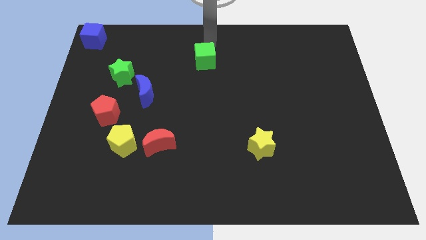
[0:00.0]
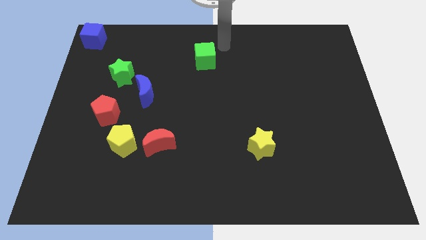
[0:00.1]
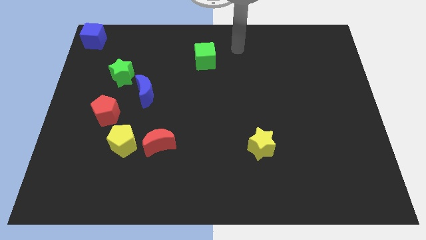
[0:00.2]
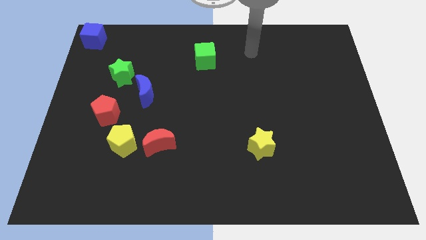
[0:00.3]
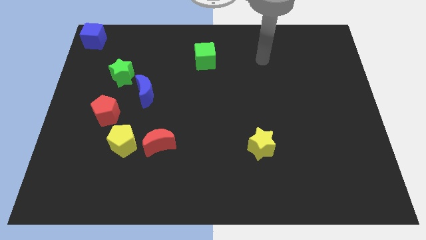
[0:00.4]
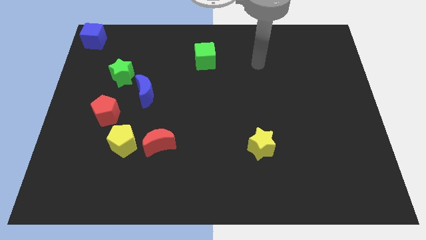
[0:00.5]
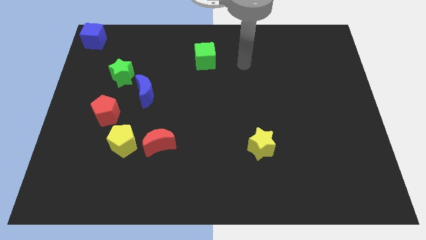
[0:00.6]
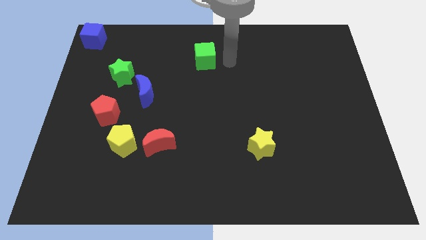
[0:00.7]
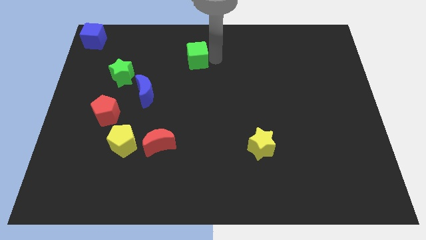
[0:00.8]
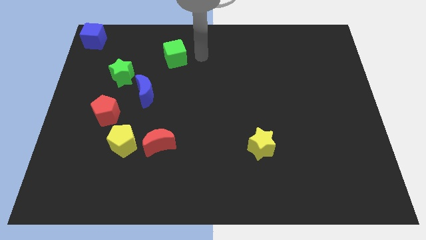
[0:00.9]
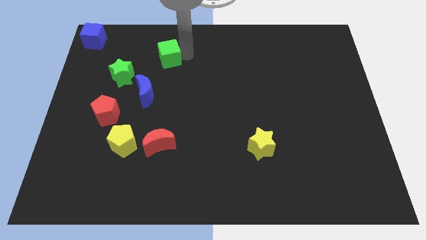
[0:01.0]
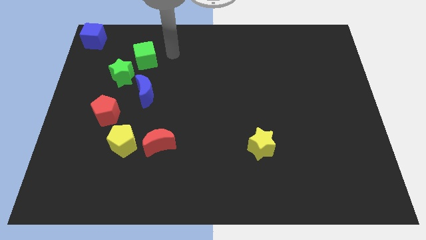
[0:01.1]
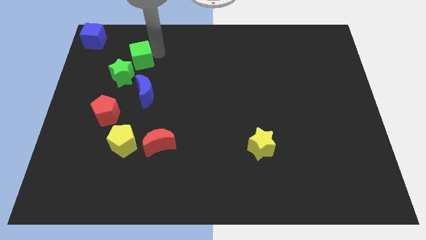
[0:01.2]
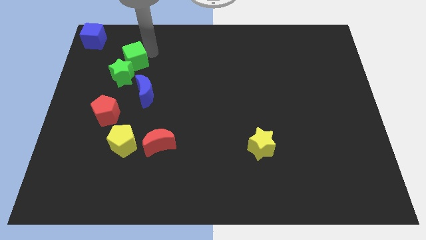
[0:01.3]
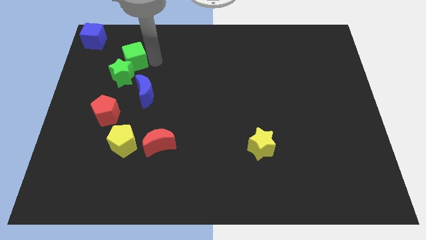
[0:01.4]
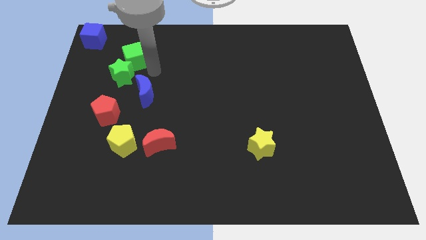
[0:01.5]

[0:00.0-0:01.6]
push the green cube into the green star

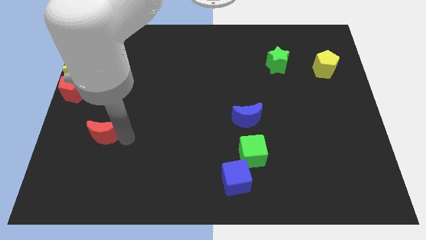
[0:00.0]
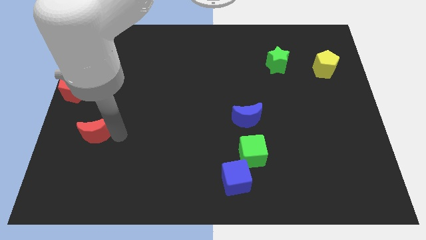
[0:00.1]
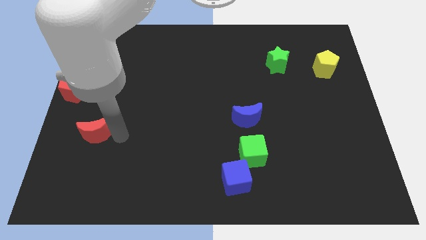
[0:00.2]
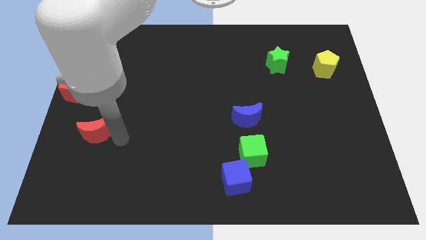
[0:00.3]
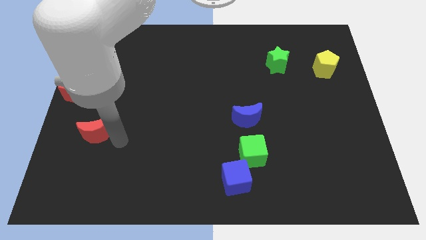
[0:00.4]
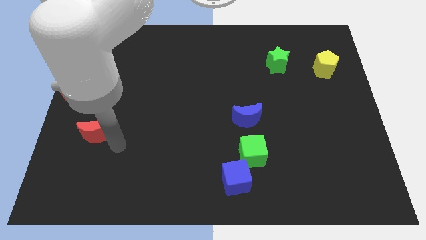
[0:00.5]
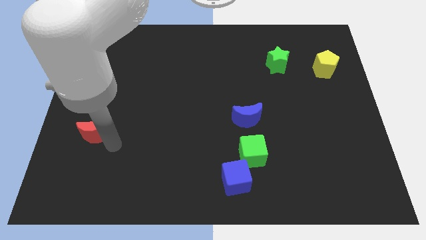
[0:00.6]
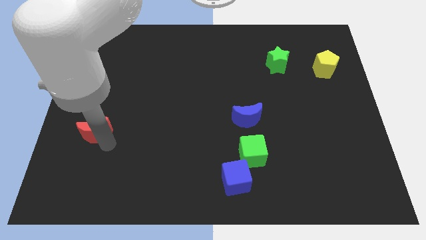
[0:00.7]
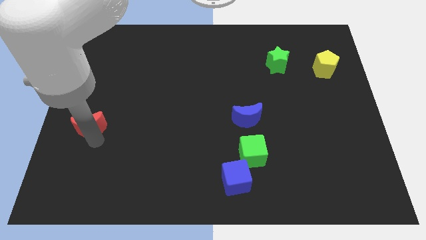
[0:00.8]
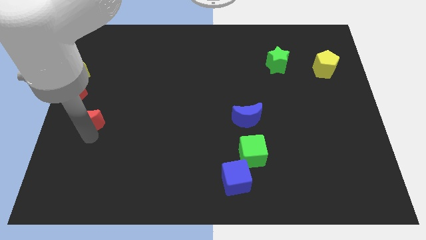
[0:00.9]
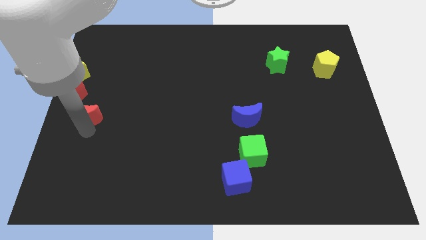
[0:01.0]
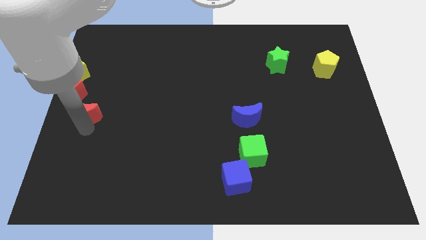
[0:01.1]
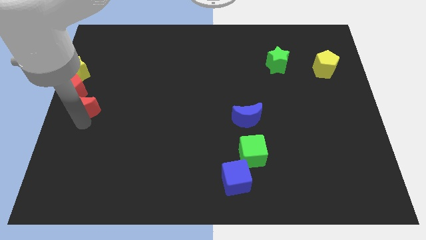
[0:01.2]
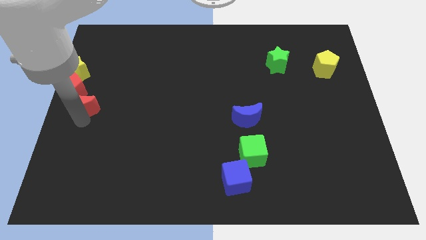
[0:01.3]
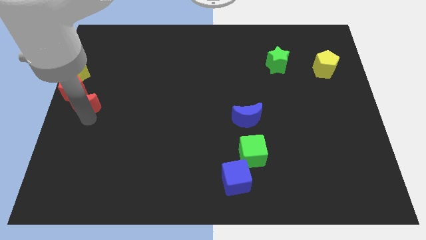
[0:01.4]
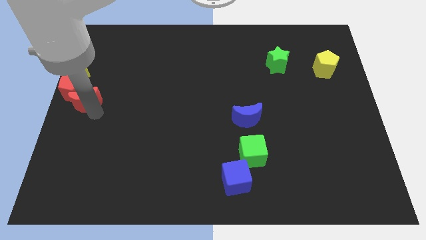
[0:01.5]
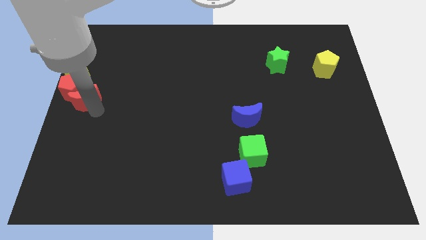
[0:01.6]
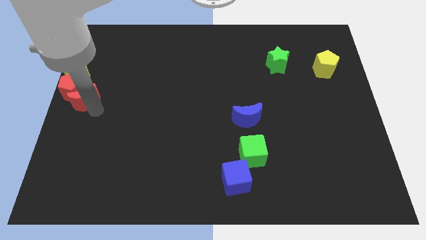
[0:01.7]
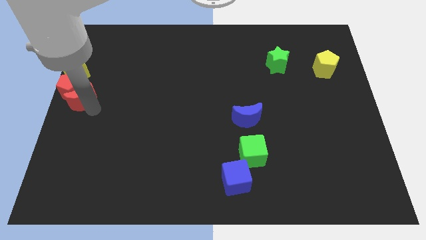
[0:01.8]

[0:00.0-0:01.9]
push the red moon into the red pentagon

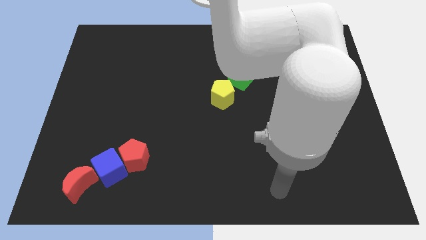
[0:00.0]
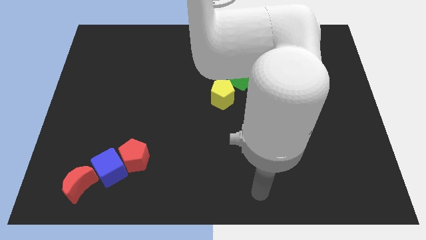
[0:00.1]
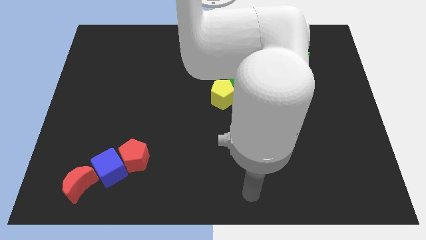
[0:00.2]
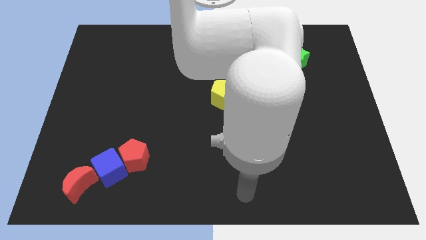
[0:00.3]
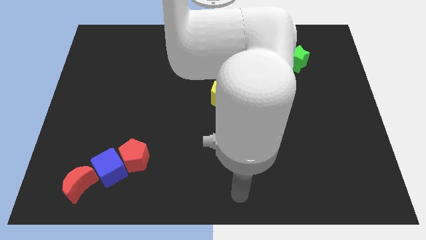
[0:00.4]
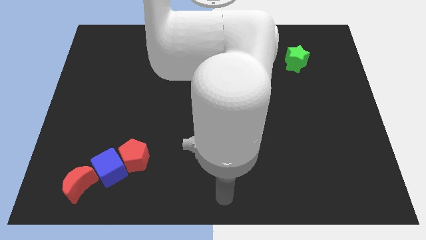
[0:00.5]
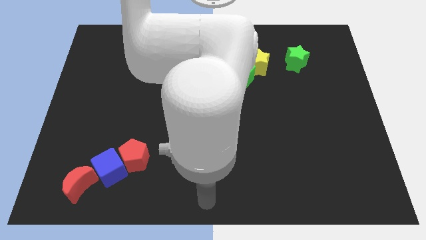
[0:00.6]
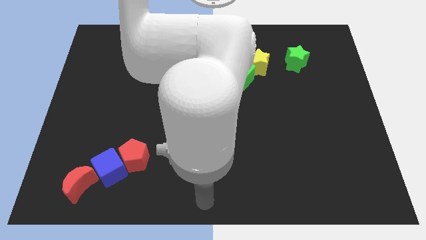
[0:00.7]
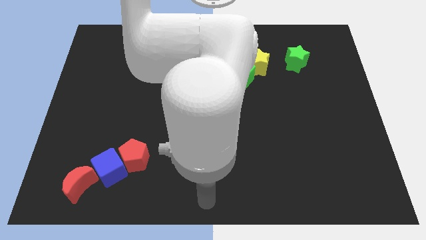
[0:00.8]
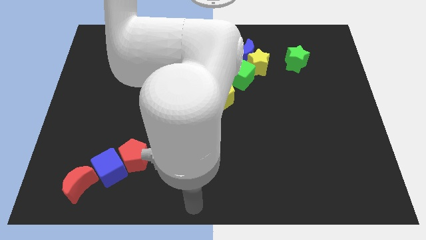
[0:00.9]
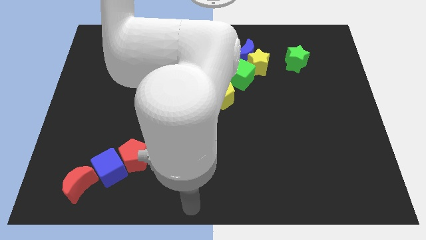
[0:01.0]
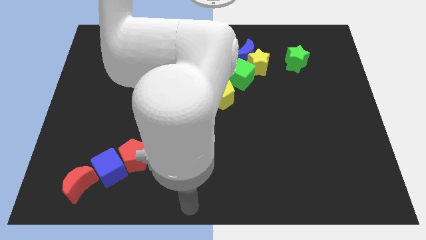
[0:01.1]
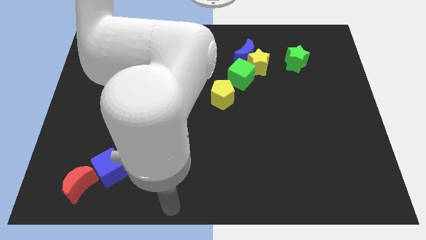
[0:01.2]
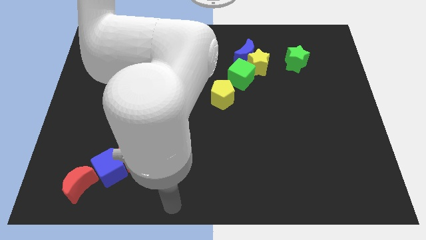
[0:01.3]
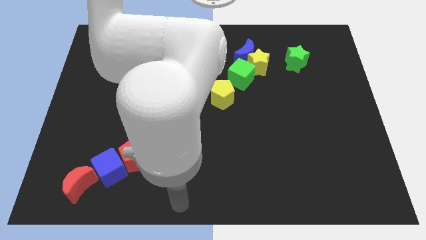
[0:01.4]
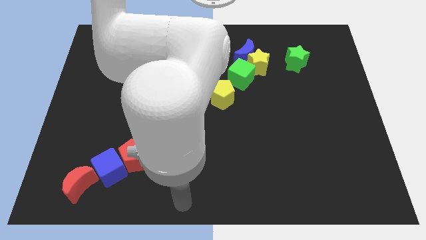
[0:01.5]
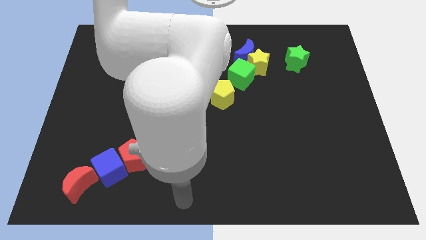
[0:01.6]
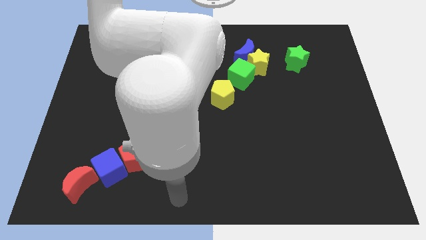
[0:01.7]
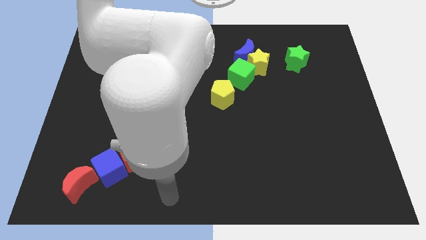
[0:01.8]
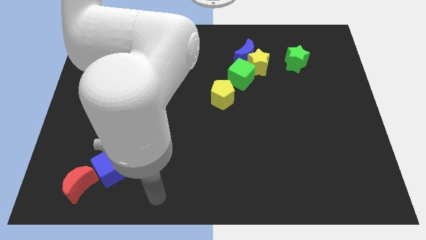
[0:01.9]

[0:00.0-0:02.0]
move your arm towards the red pentagon

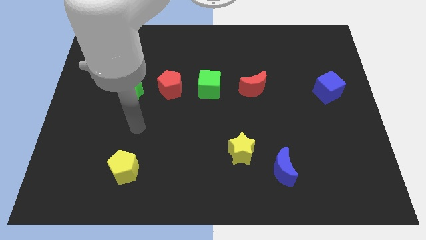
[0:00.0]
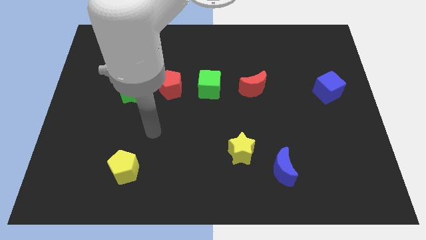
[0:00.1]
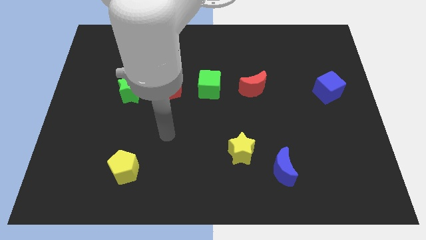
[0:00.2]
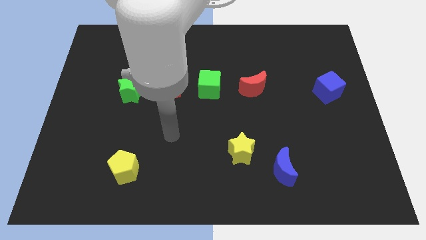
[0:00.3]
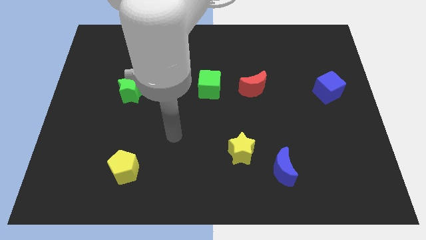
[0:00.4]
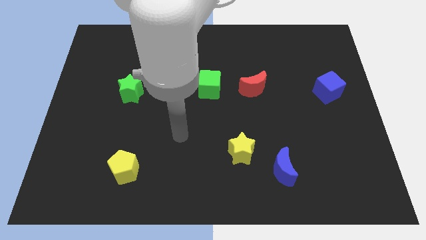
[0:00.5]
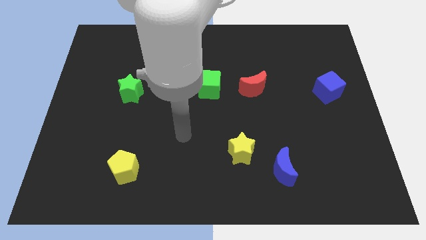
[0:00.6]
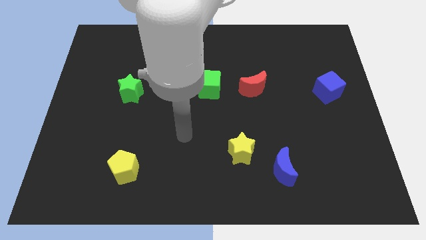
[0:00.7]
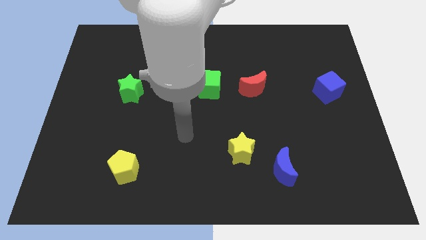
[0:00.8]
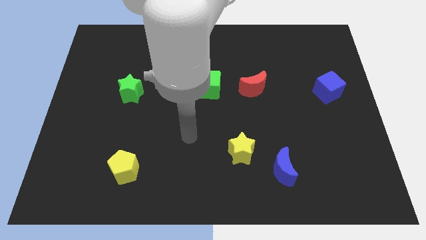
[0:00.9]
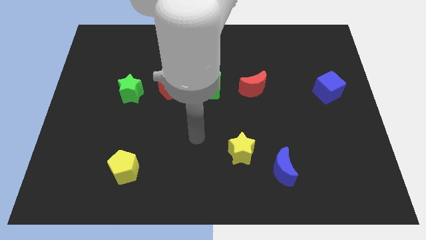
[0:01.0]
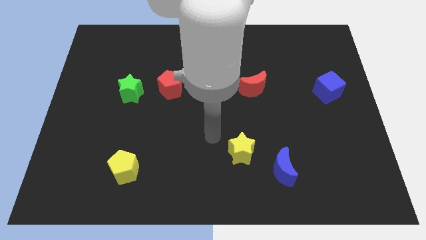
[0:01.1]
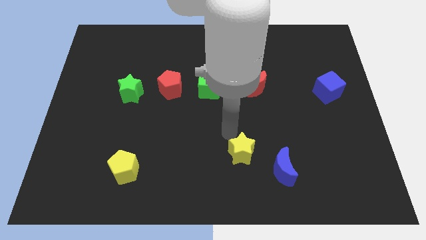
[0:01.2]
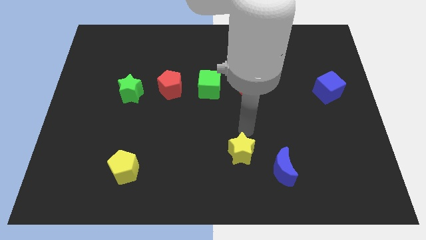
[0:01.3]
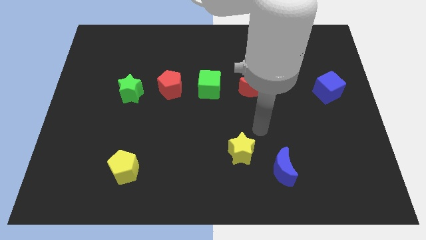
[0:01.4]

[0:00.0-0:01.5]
place your arm at the top of yellow star

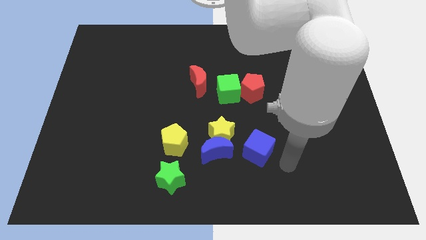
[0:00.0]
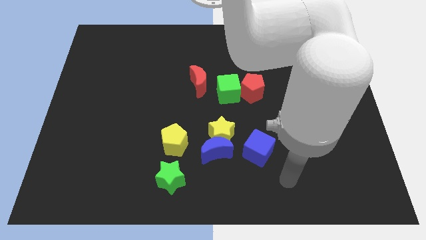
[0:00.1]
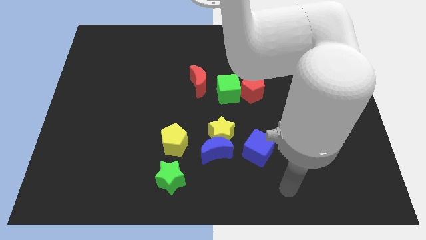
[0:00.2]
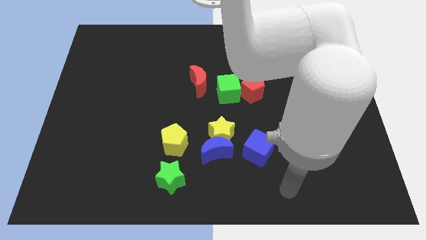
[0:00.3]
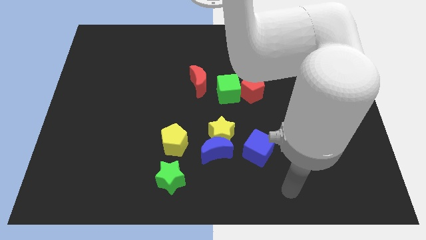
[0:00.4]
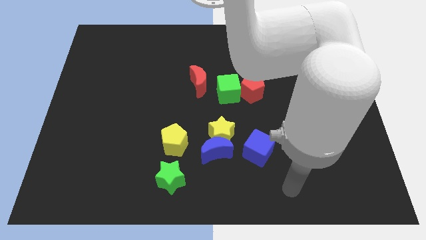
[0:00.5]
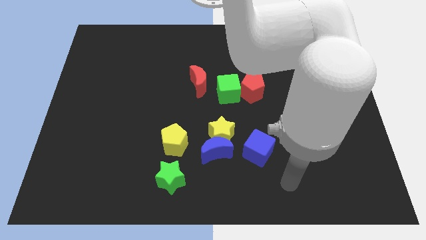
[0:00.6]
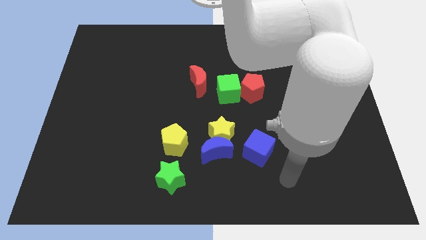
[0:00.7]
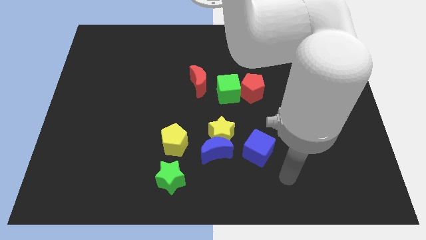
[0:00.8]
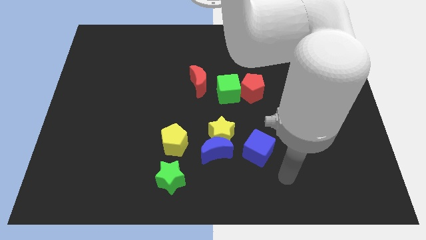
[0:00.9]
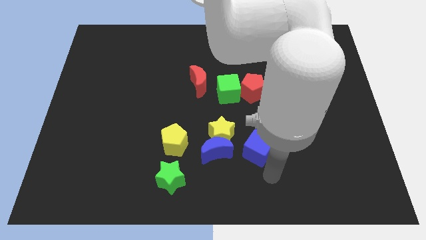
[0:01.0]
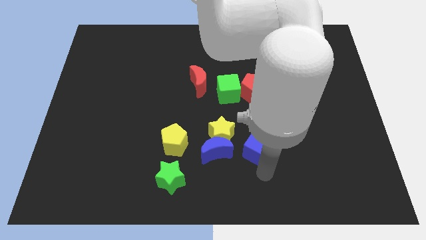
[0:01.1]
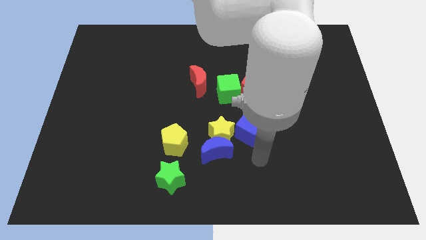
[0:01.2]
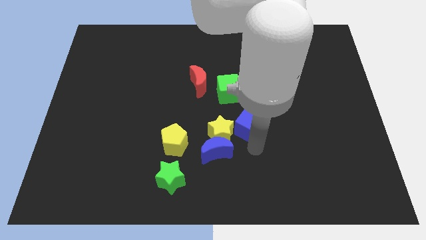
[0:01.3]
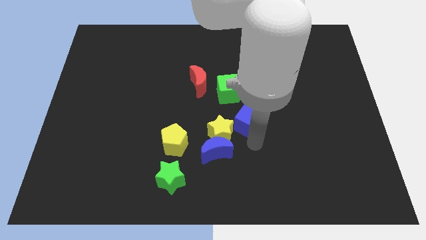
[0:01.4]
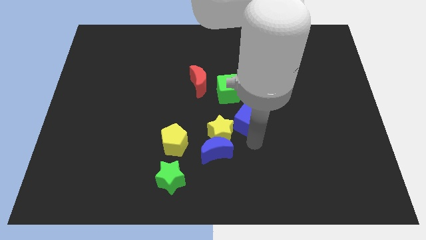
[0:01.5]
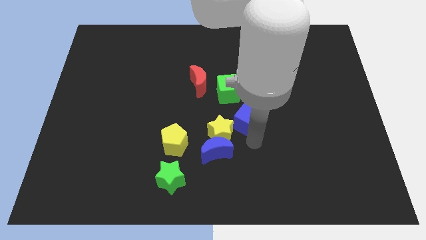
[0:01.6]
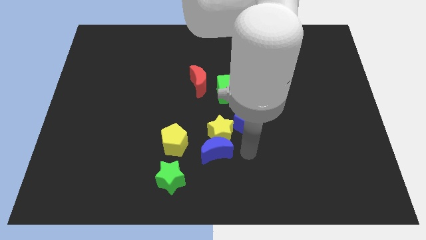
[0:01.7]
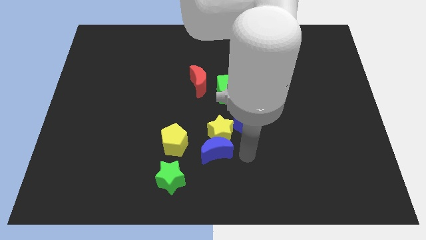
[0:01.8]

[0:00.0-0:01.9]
move the blue cube towards the center of the board

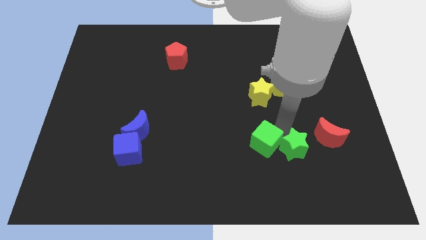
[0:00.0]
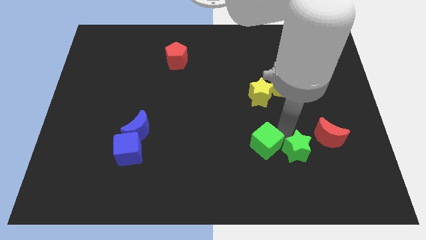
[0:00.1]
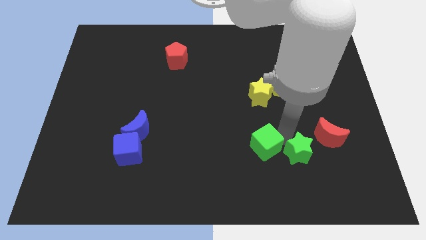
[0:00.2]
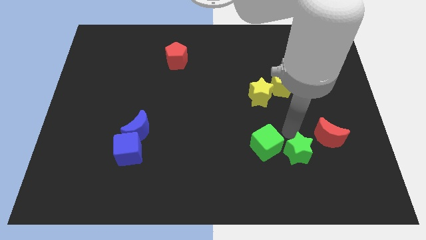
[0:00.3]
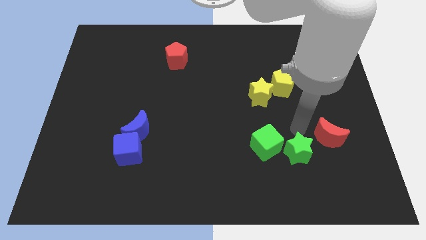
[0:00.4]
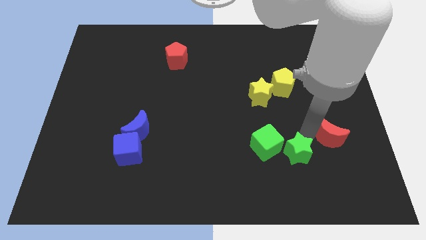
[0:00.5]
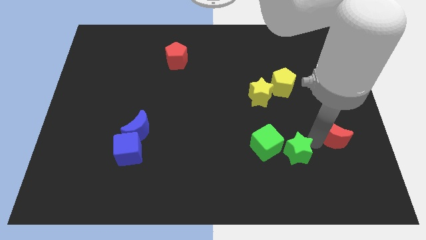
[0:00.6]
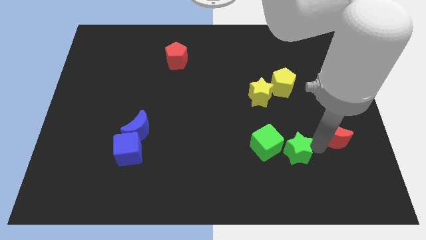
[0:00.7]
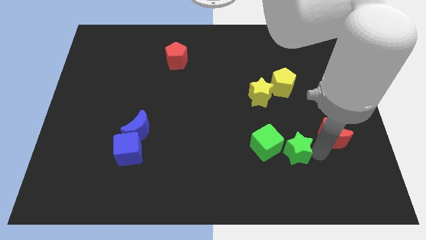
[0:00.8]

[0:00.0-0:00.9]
slightly move the red moon towards the right side
